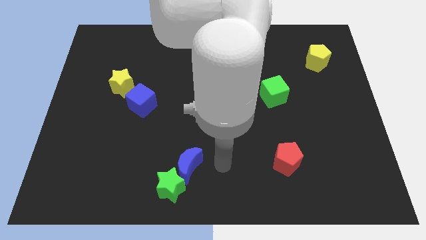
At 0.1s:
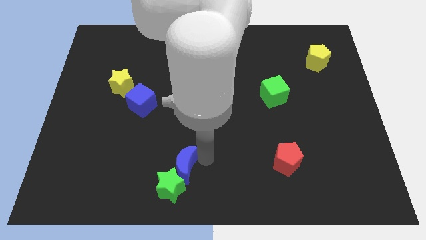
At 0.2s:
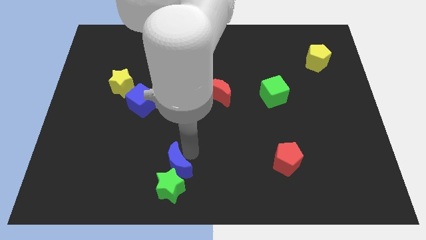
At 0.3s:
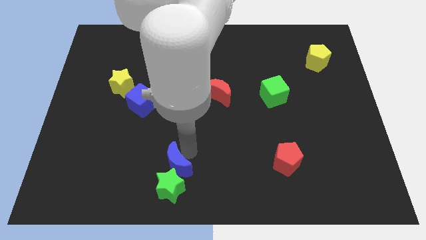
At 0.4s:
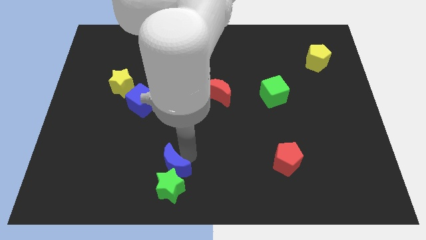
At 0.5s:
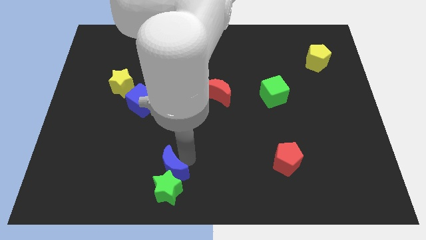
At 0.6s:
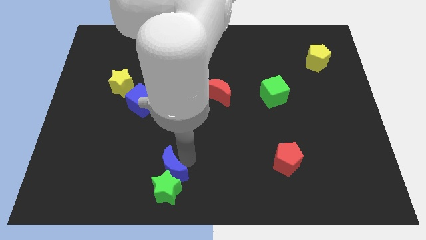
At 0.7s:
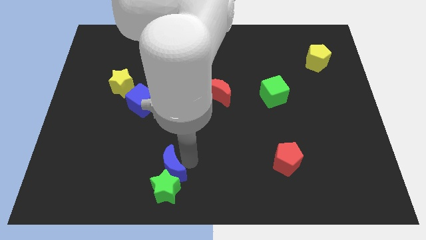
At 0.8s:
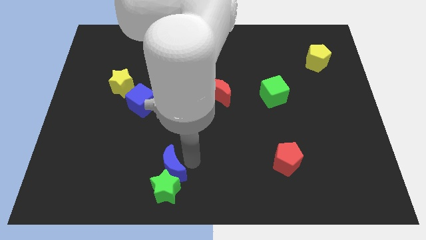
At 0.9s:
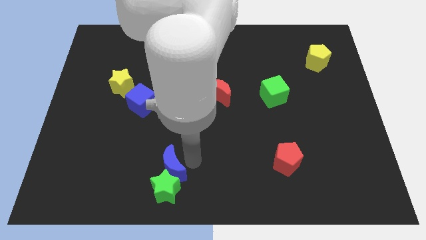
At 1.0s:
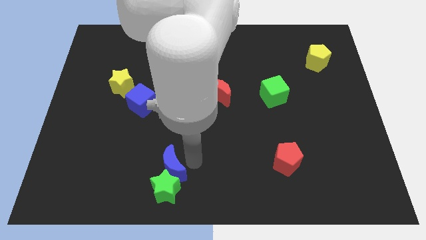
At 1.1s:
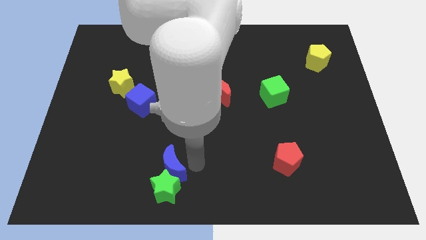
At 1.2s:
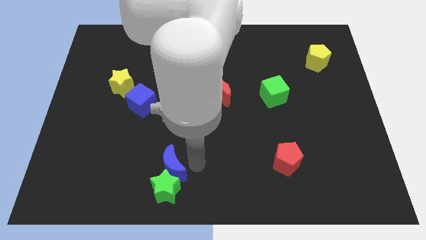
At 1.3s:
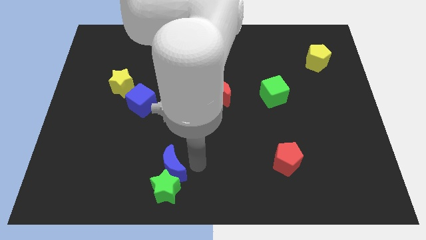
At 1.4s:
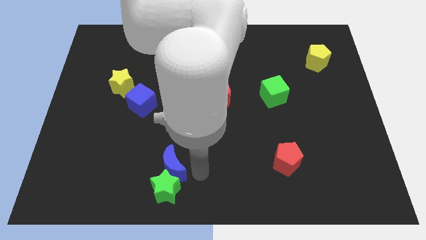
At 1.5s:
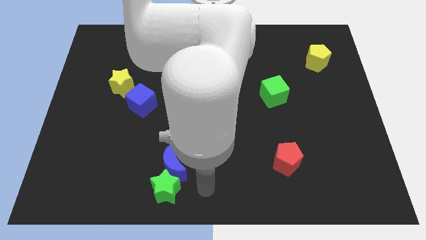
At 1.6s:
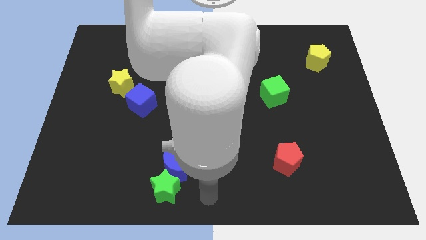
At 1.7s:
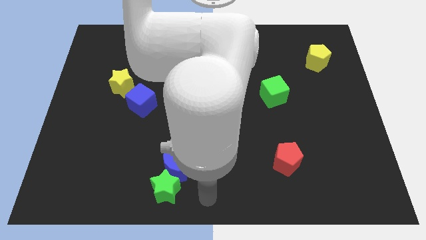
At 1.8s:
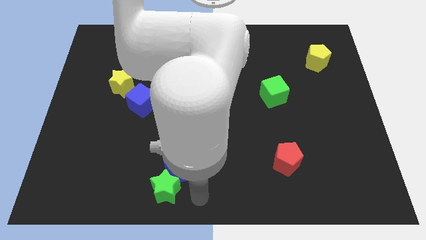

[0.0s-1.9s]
move the arm to the right of the green star

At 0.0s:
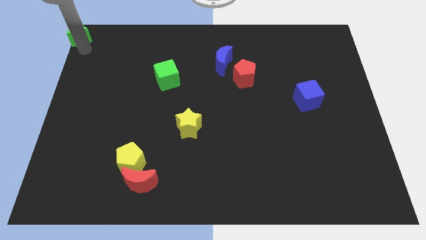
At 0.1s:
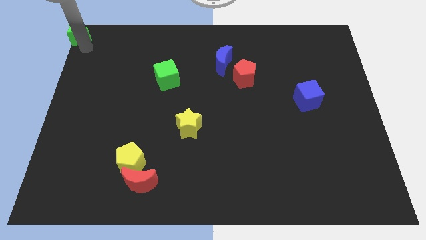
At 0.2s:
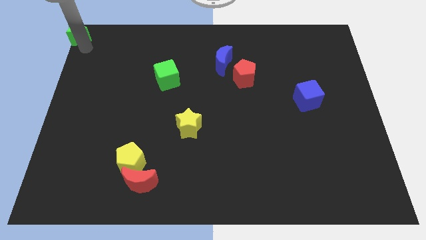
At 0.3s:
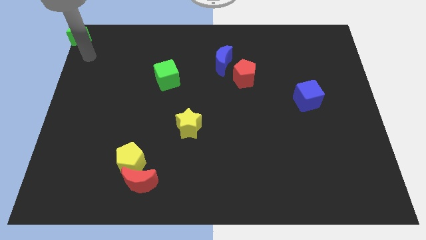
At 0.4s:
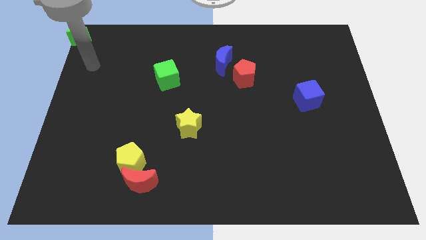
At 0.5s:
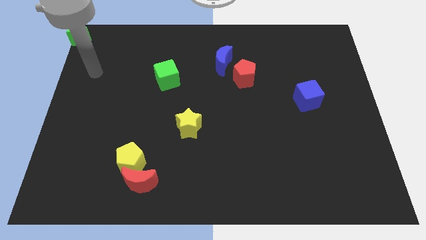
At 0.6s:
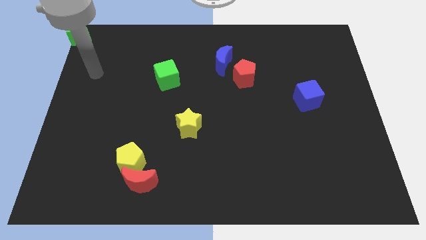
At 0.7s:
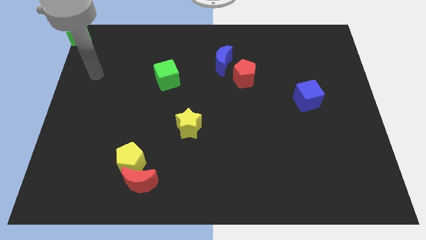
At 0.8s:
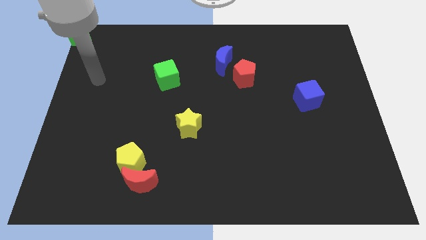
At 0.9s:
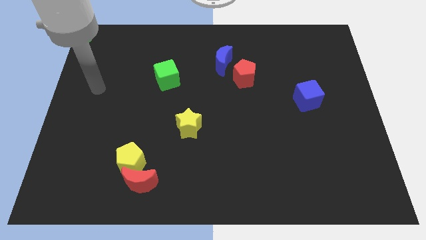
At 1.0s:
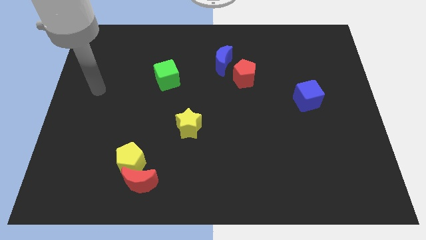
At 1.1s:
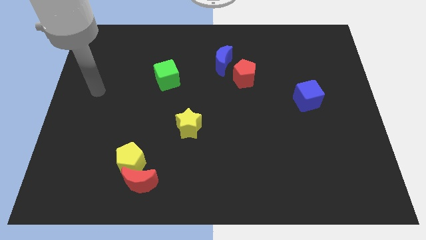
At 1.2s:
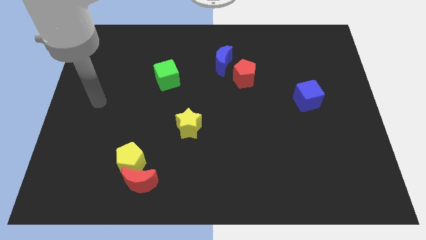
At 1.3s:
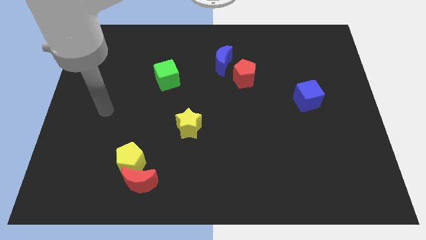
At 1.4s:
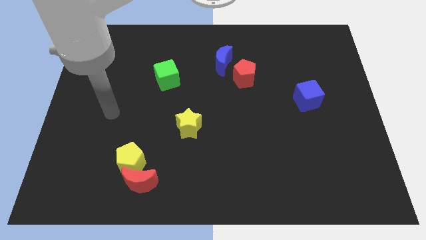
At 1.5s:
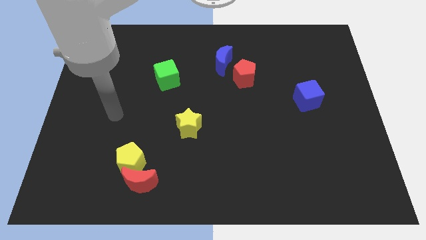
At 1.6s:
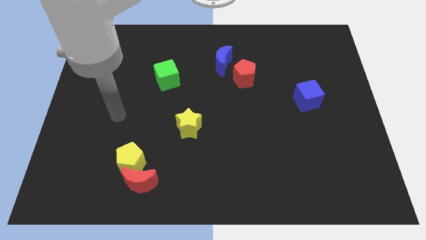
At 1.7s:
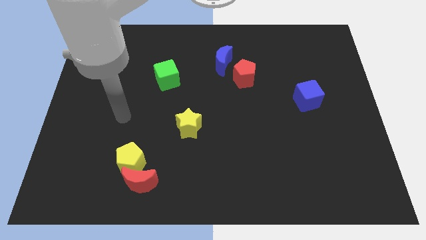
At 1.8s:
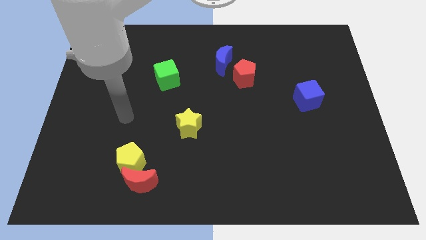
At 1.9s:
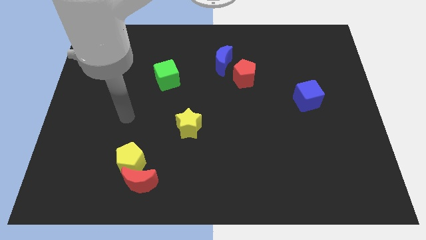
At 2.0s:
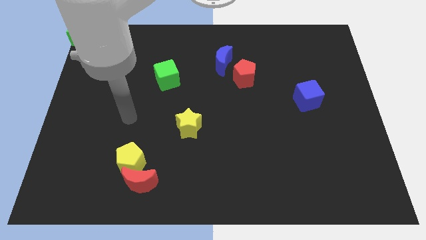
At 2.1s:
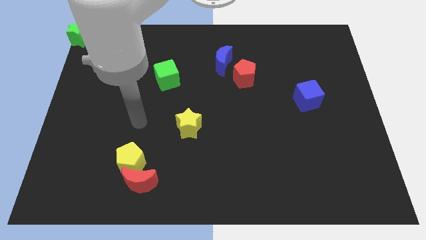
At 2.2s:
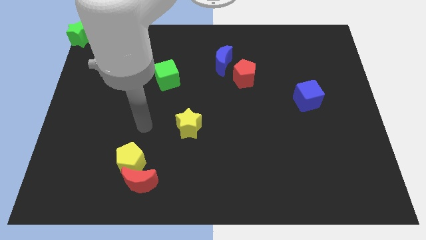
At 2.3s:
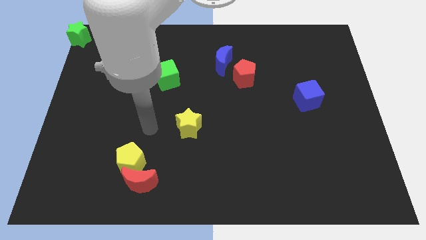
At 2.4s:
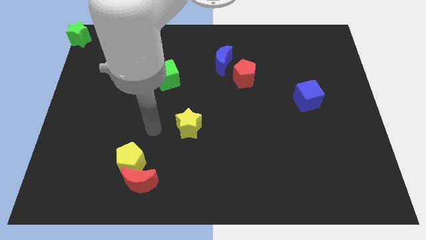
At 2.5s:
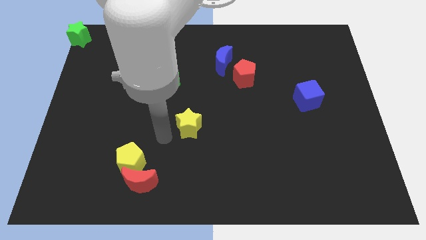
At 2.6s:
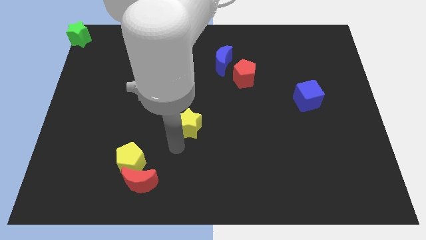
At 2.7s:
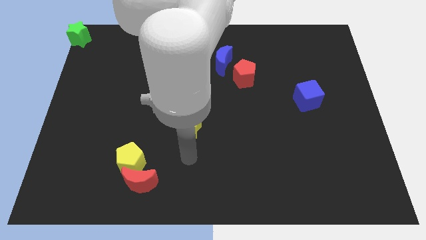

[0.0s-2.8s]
place your arm to the bottom of the yellow star

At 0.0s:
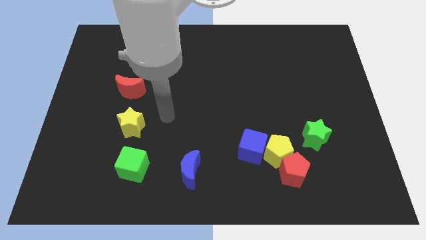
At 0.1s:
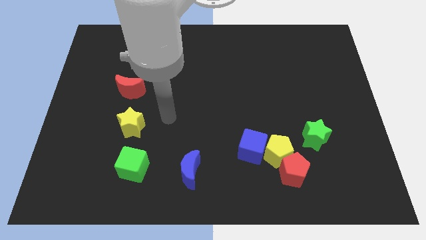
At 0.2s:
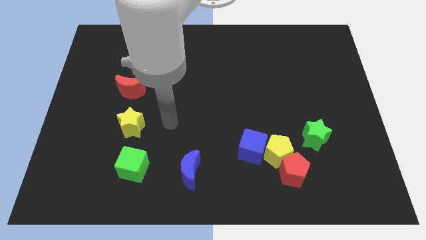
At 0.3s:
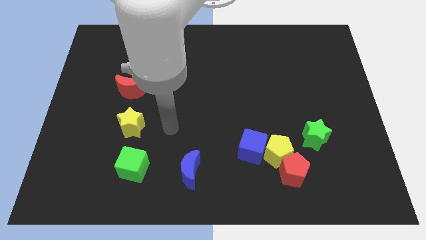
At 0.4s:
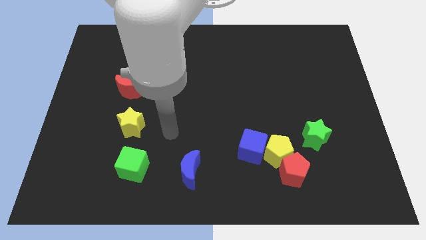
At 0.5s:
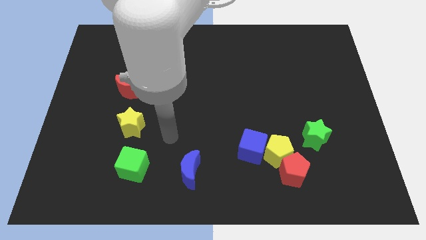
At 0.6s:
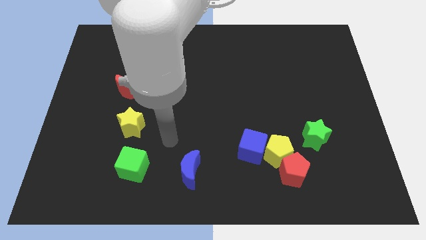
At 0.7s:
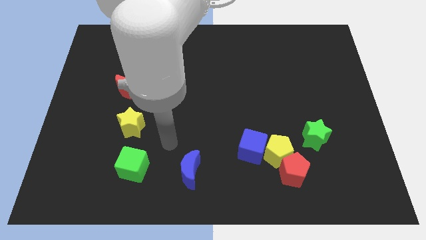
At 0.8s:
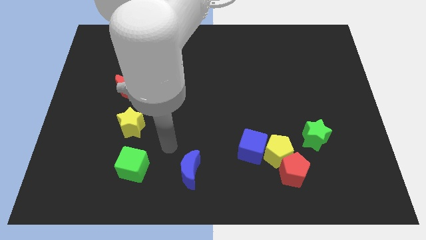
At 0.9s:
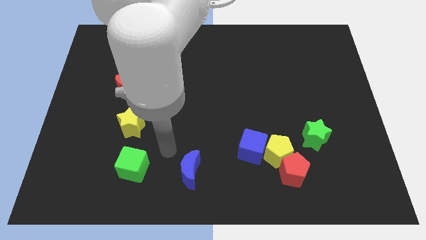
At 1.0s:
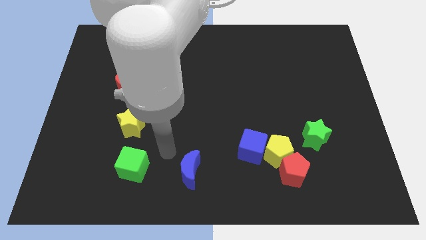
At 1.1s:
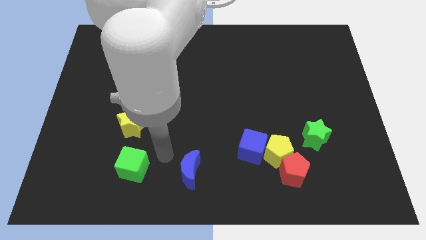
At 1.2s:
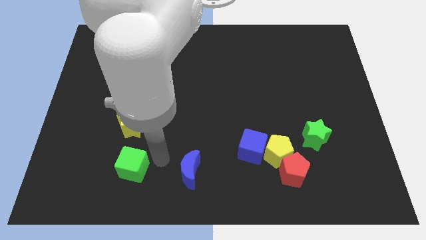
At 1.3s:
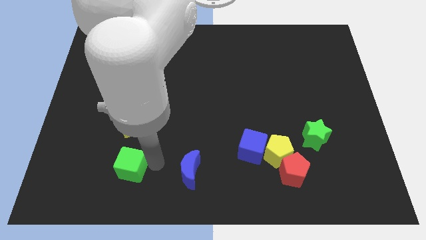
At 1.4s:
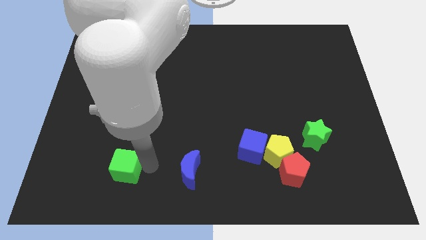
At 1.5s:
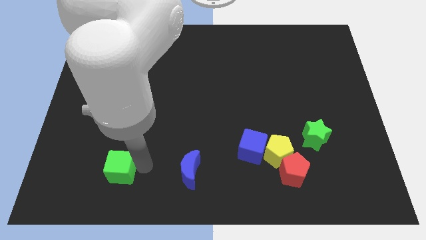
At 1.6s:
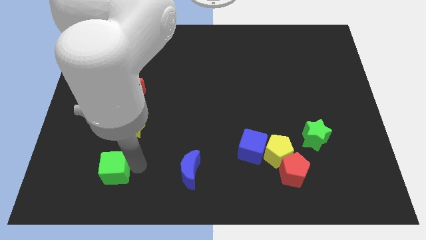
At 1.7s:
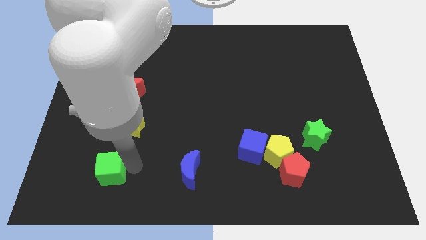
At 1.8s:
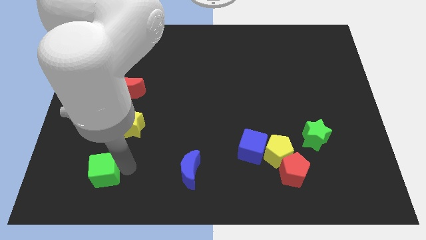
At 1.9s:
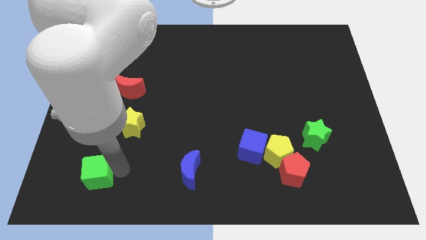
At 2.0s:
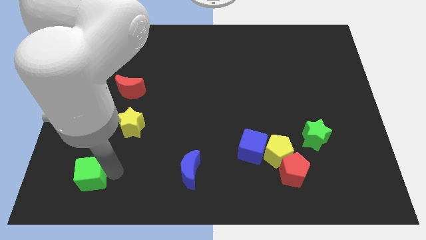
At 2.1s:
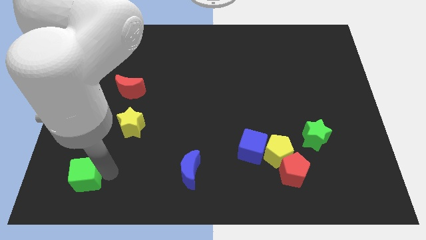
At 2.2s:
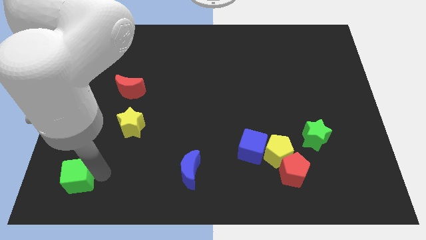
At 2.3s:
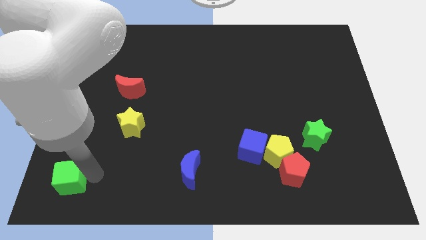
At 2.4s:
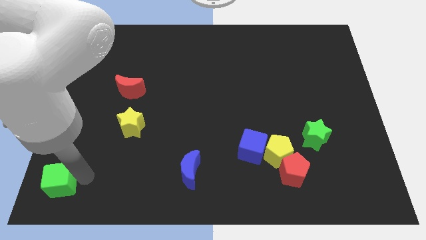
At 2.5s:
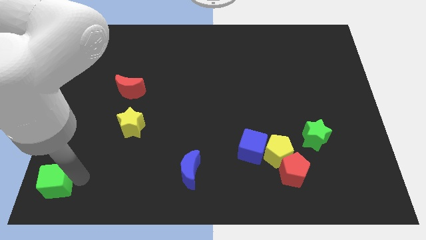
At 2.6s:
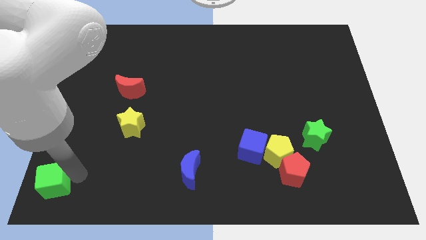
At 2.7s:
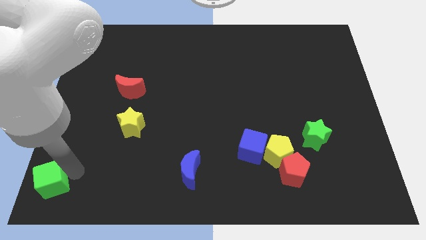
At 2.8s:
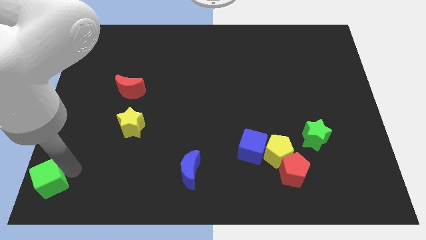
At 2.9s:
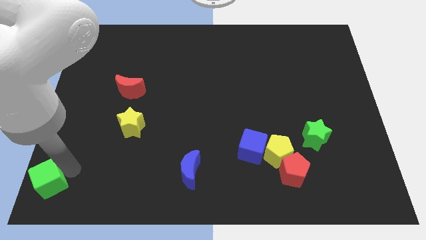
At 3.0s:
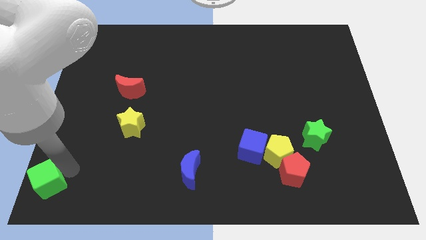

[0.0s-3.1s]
slide the green cube at the bottom left side

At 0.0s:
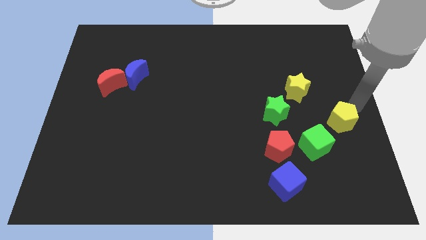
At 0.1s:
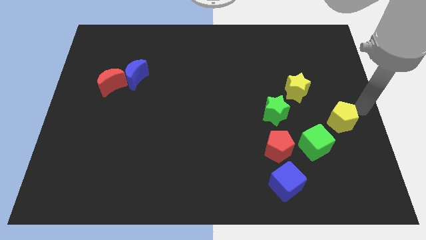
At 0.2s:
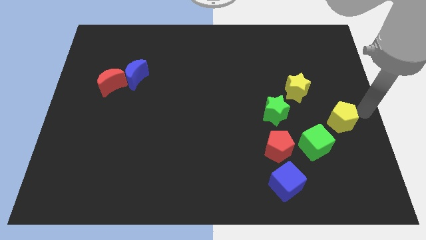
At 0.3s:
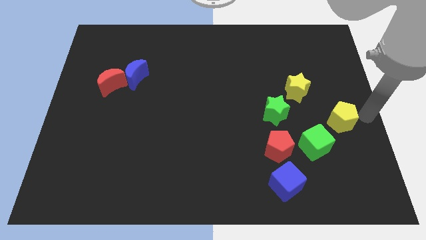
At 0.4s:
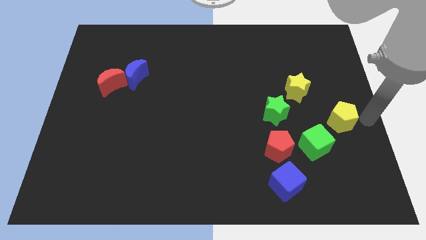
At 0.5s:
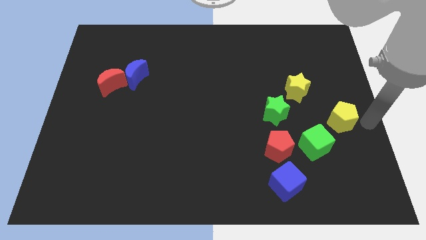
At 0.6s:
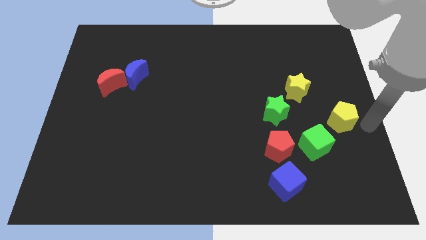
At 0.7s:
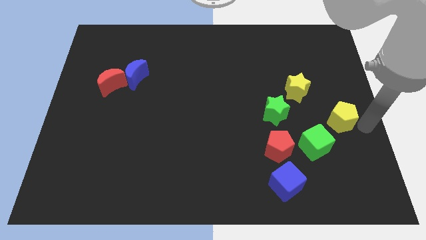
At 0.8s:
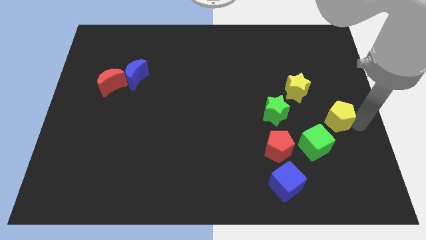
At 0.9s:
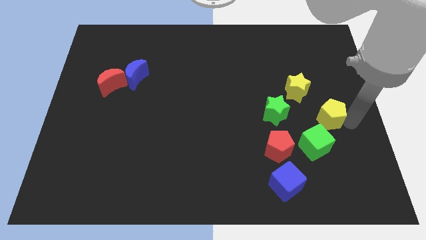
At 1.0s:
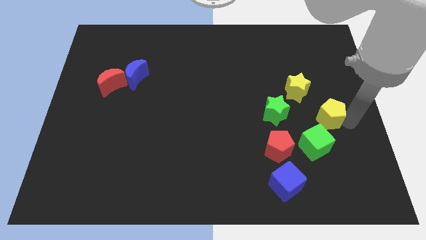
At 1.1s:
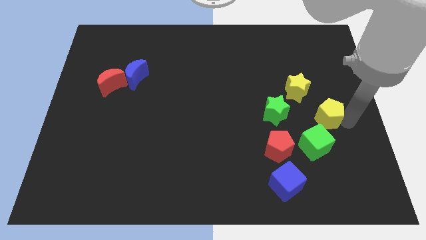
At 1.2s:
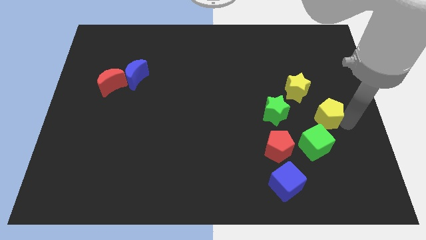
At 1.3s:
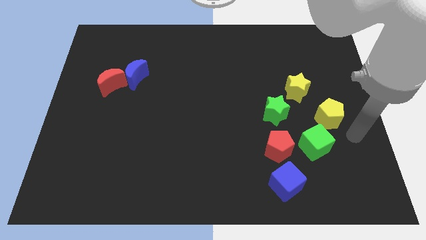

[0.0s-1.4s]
push yellow pentagon slightly towards left
